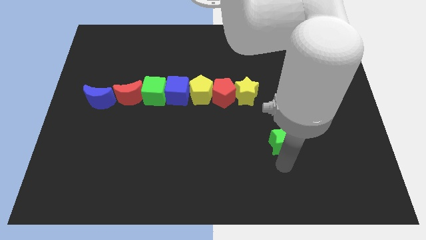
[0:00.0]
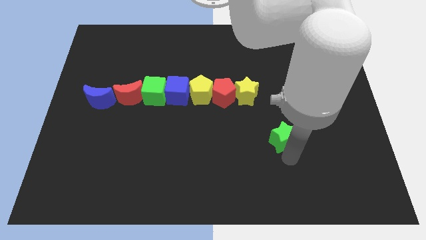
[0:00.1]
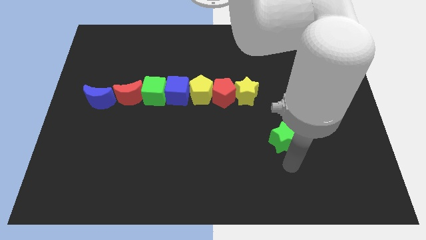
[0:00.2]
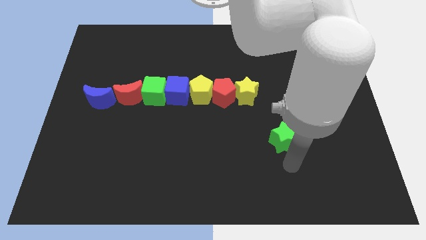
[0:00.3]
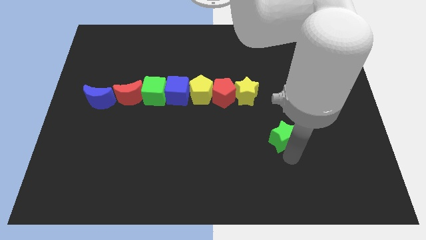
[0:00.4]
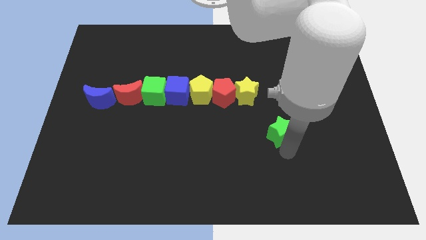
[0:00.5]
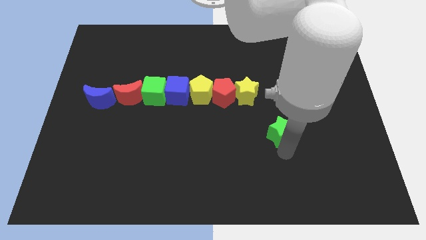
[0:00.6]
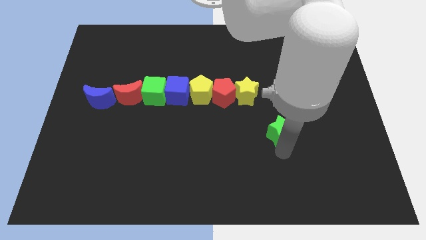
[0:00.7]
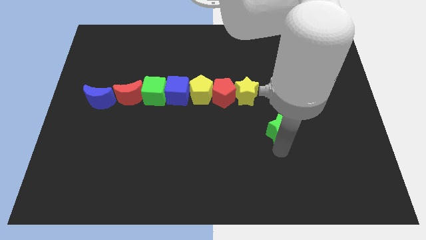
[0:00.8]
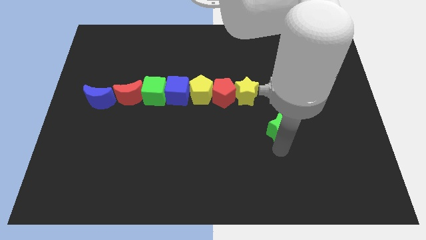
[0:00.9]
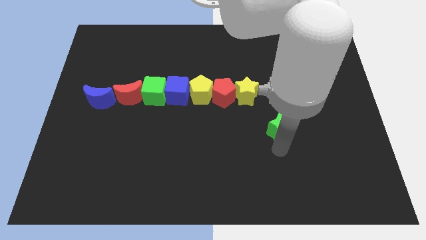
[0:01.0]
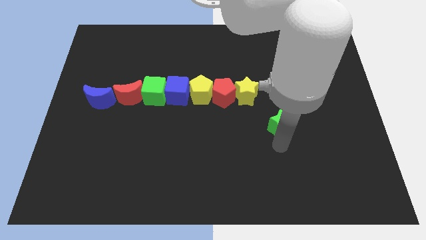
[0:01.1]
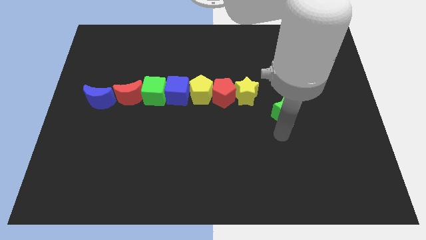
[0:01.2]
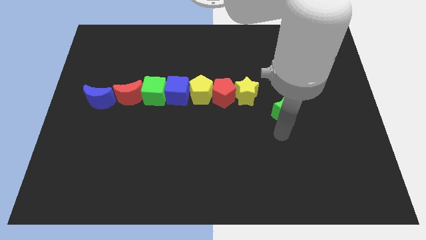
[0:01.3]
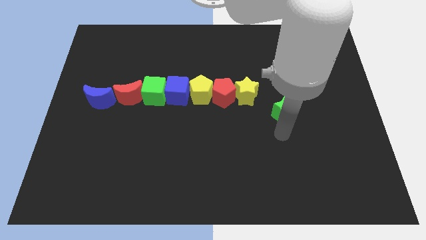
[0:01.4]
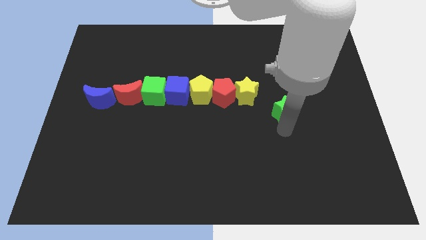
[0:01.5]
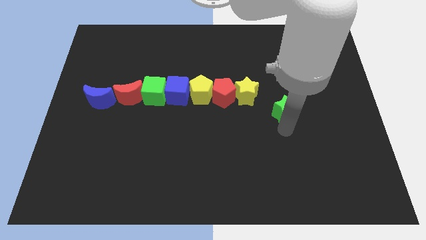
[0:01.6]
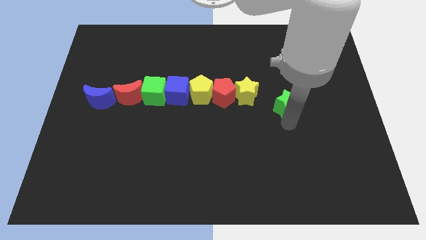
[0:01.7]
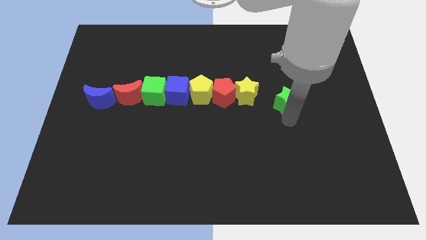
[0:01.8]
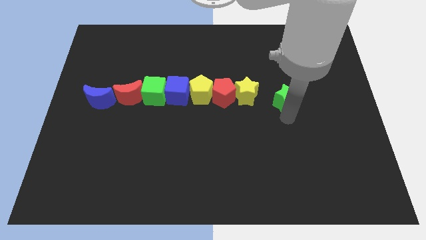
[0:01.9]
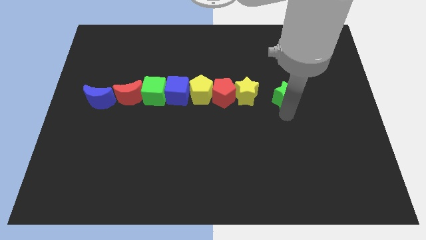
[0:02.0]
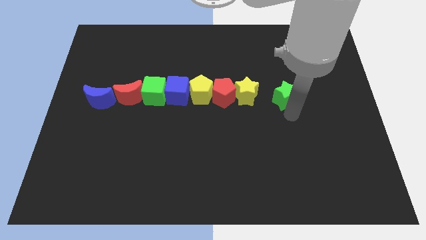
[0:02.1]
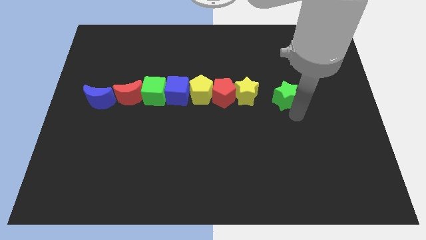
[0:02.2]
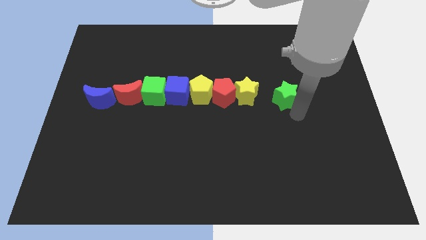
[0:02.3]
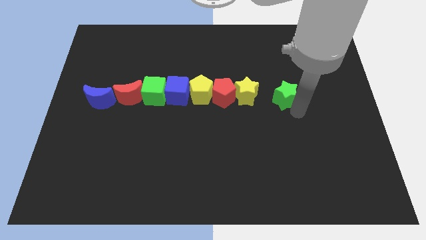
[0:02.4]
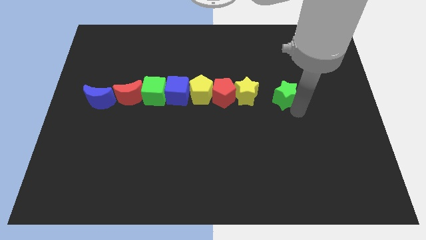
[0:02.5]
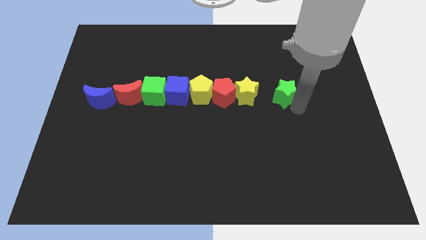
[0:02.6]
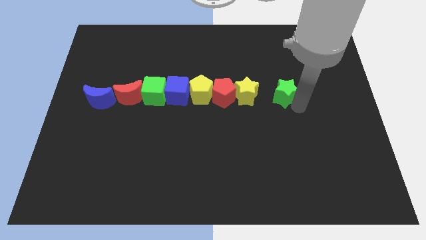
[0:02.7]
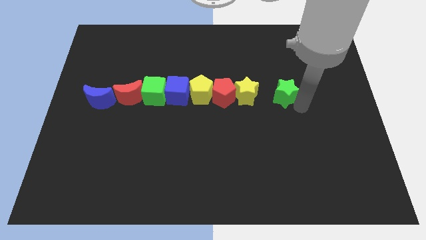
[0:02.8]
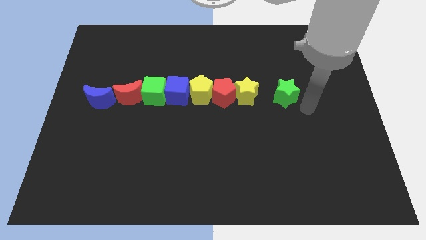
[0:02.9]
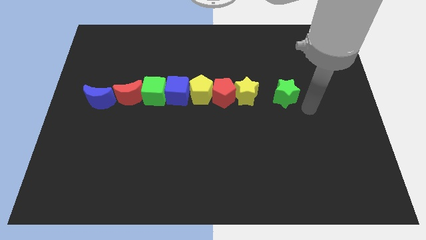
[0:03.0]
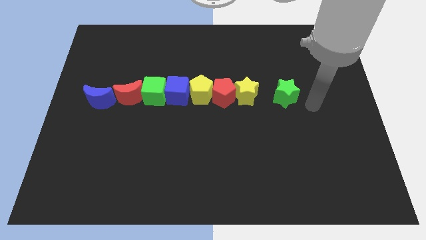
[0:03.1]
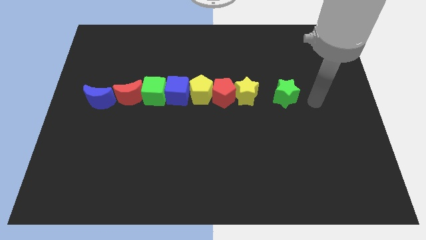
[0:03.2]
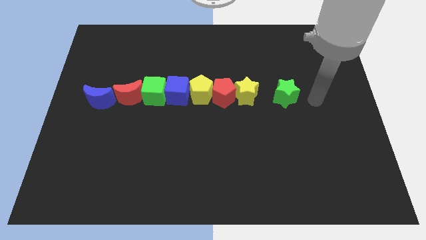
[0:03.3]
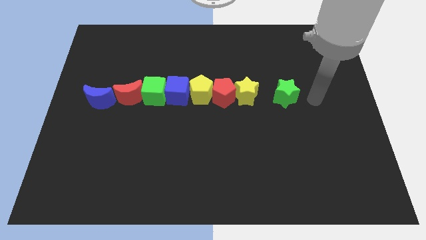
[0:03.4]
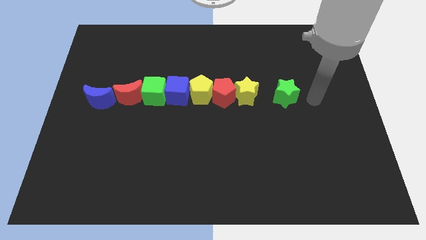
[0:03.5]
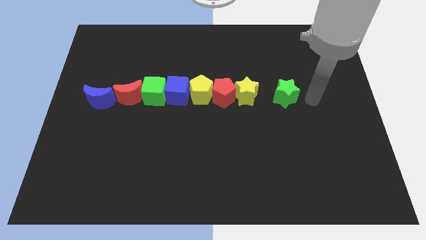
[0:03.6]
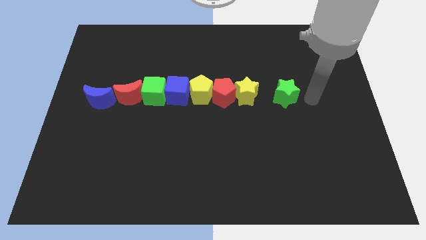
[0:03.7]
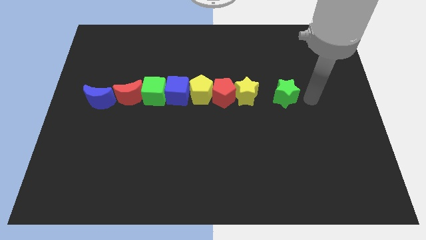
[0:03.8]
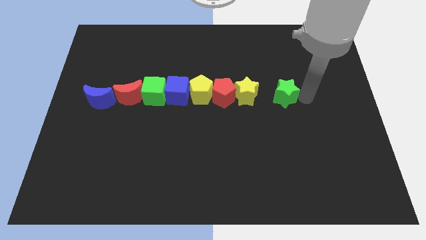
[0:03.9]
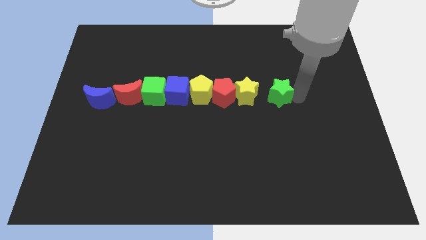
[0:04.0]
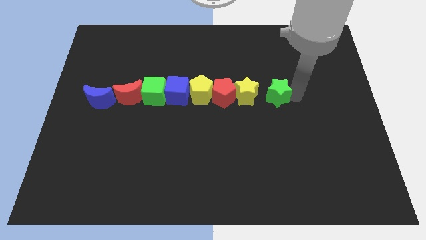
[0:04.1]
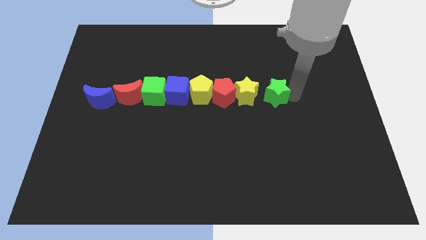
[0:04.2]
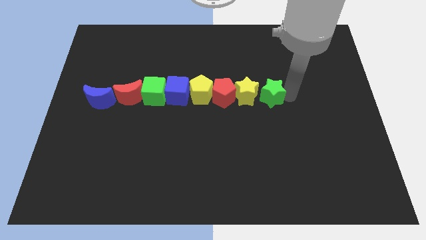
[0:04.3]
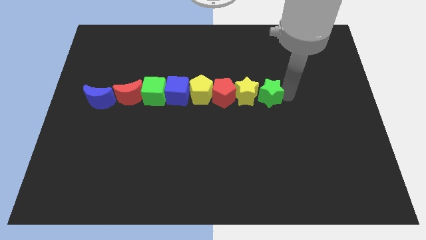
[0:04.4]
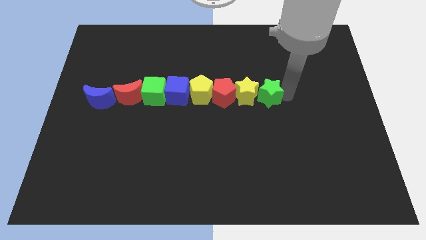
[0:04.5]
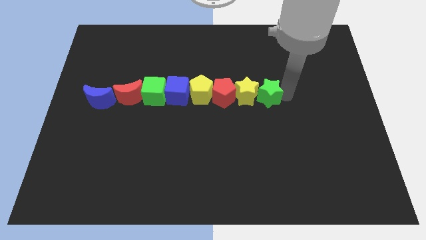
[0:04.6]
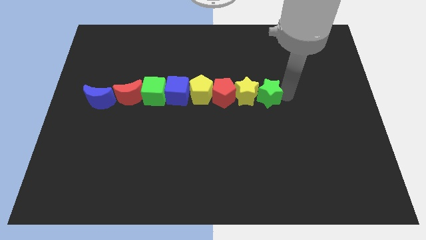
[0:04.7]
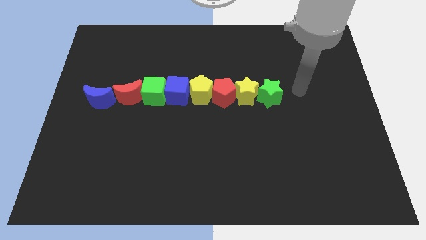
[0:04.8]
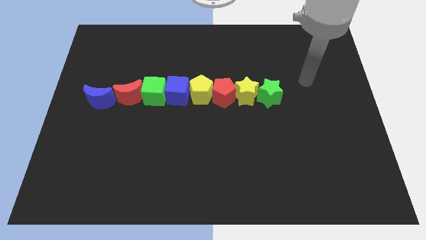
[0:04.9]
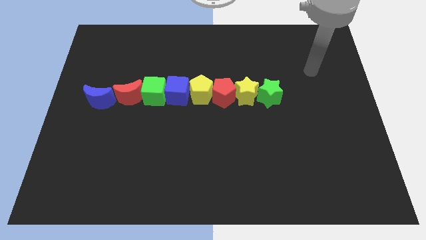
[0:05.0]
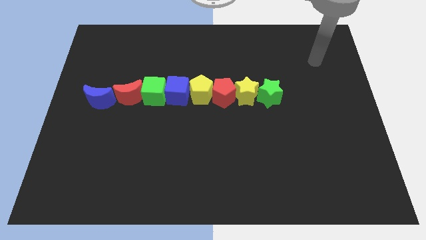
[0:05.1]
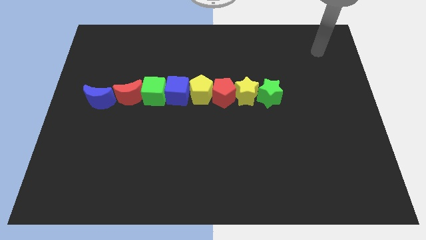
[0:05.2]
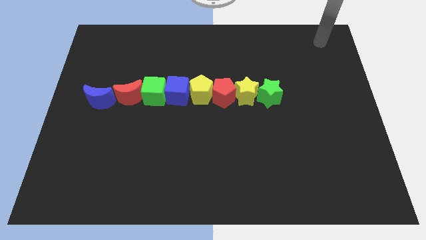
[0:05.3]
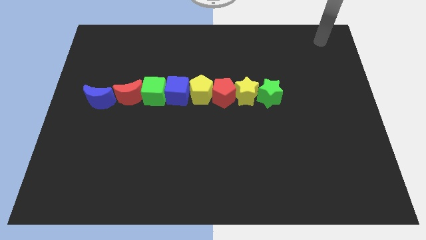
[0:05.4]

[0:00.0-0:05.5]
place the green star to the right of the yellow star

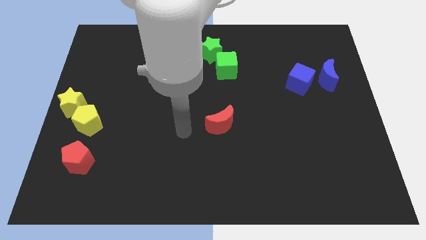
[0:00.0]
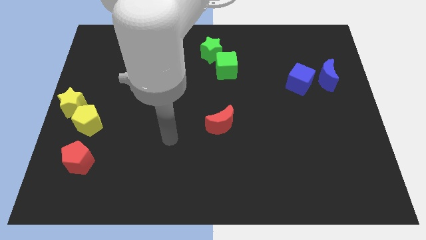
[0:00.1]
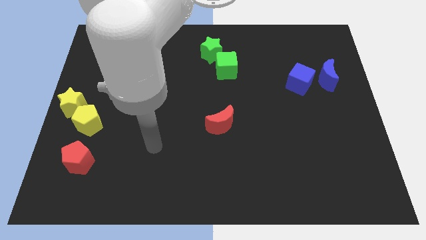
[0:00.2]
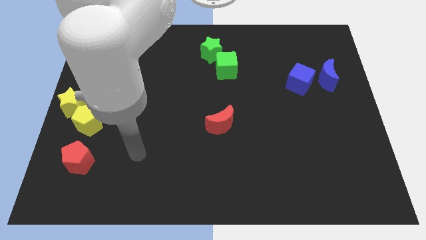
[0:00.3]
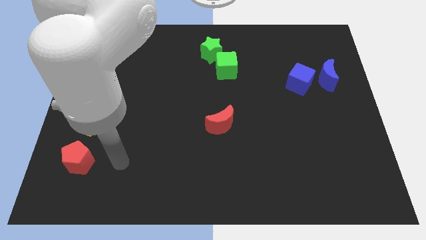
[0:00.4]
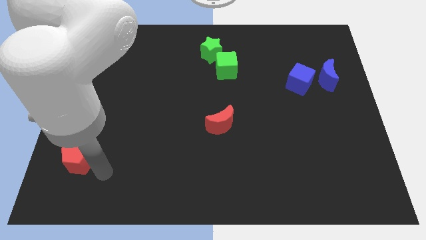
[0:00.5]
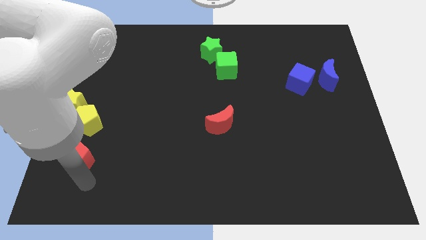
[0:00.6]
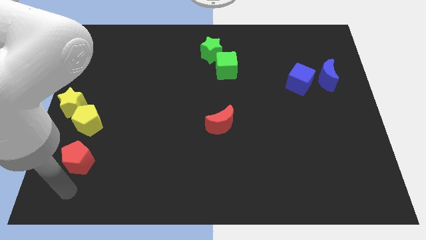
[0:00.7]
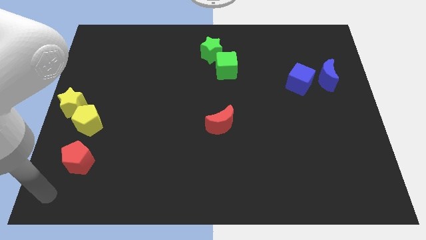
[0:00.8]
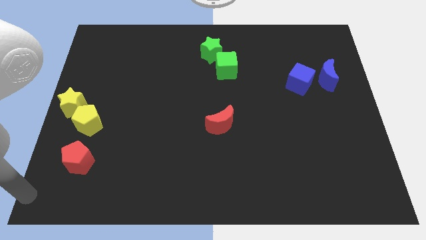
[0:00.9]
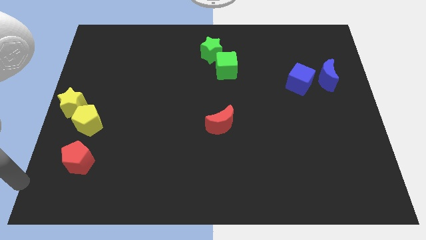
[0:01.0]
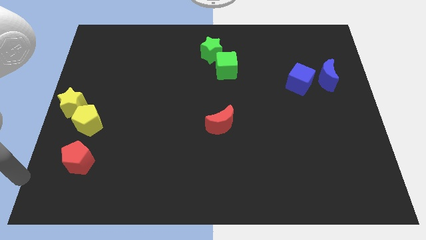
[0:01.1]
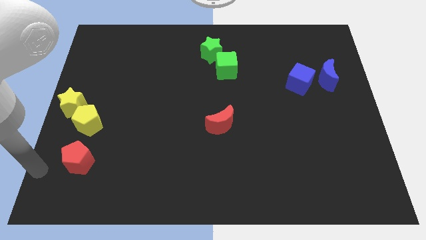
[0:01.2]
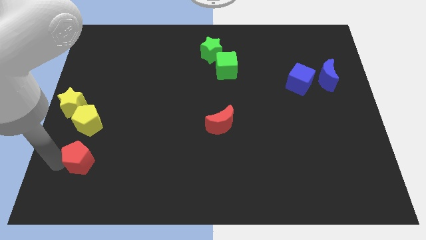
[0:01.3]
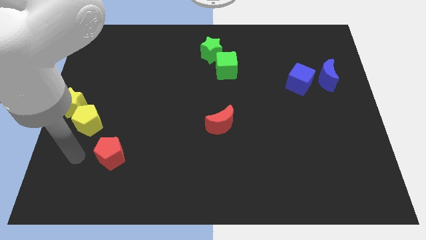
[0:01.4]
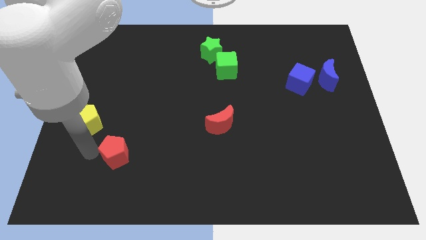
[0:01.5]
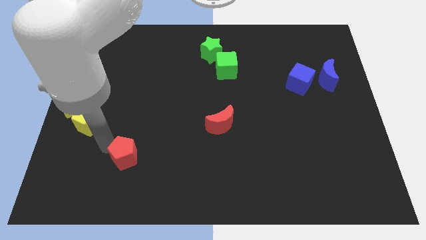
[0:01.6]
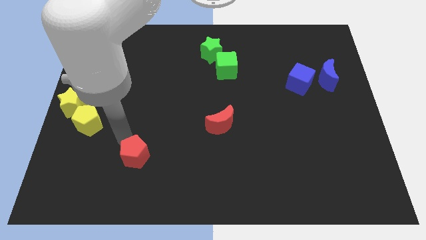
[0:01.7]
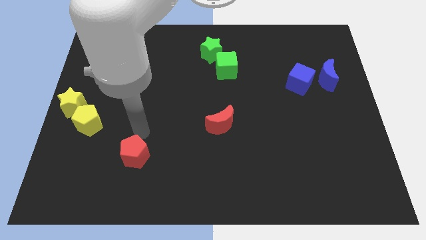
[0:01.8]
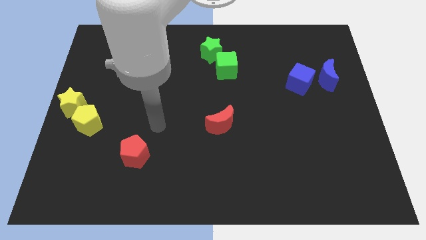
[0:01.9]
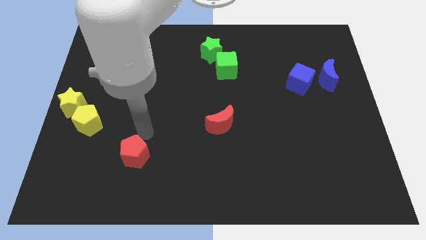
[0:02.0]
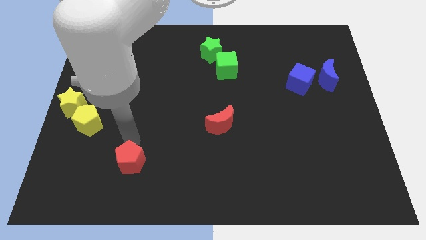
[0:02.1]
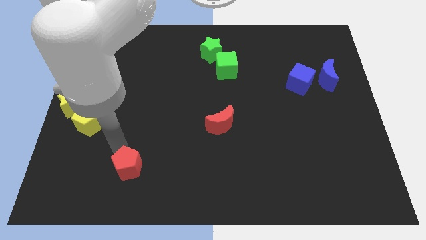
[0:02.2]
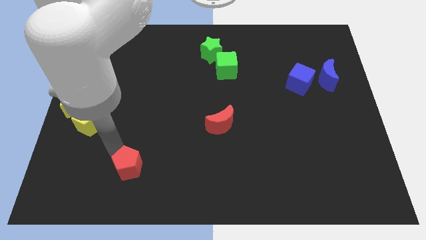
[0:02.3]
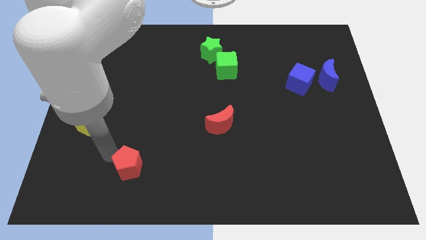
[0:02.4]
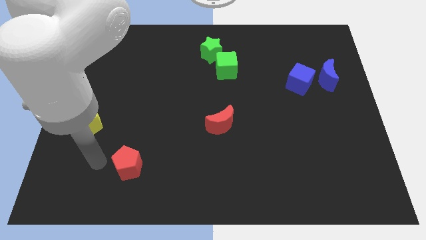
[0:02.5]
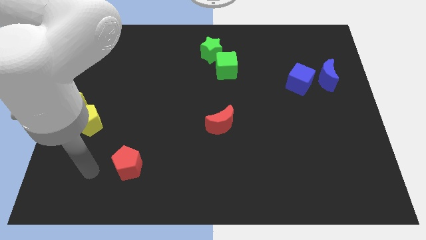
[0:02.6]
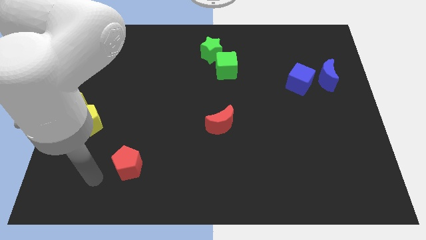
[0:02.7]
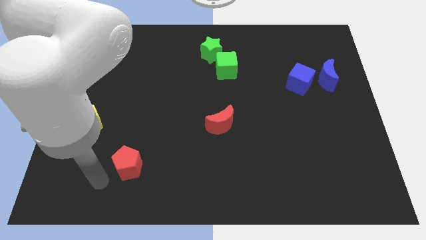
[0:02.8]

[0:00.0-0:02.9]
move the red pentagon diagonally bottom right to the yellow pentagon

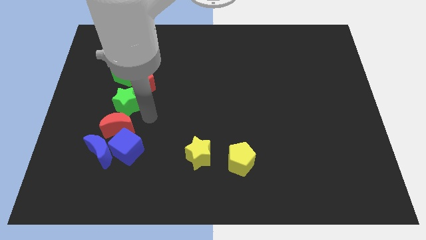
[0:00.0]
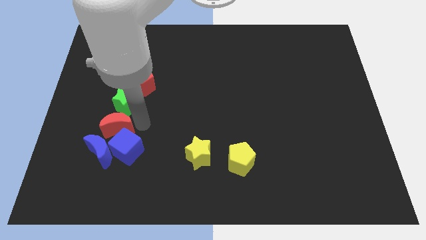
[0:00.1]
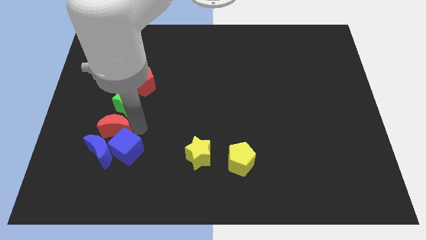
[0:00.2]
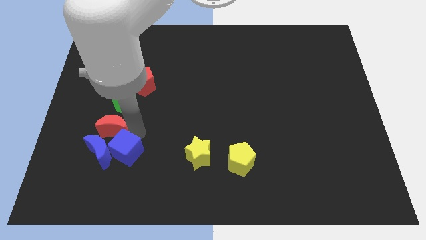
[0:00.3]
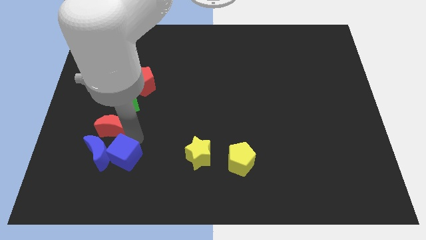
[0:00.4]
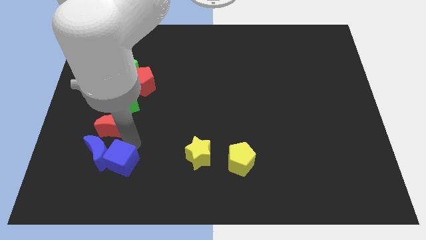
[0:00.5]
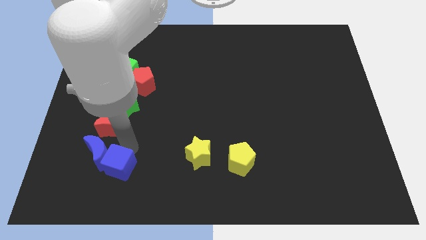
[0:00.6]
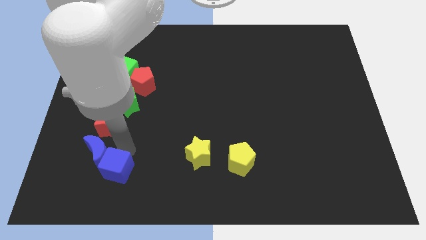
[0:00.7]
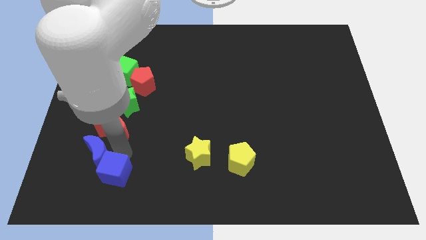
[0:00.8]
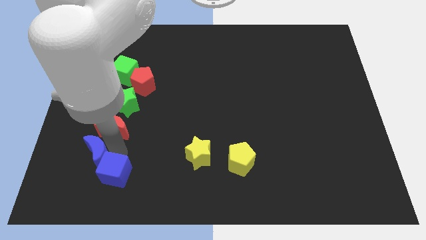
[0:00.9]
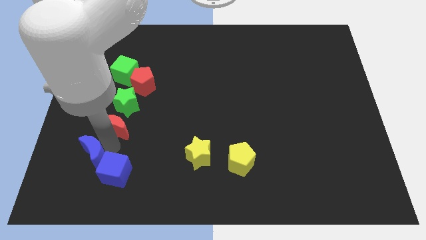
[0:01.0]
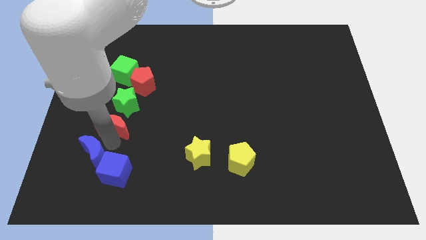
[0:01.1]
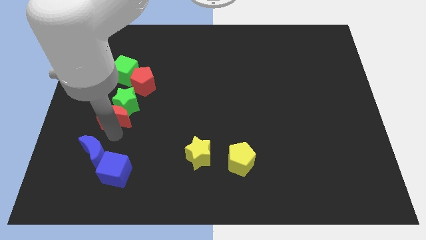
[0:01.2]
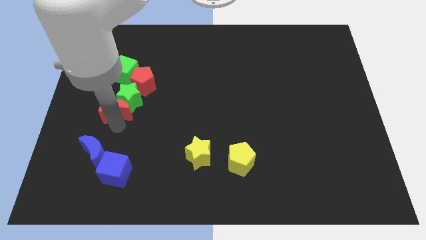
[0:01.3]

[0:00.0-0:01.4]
separate the blue blocks with a group of blocks
